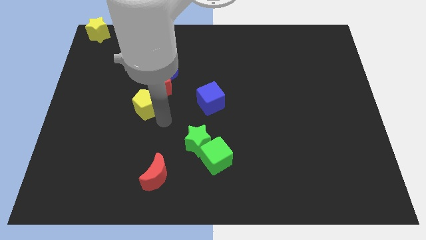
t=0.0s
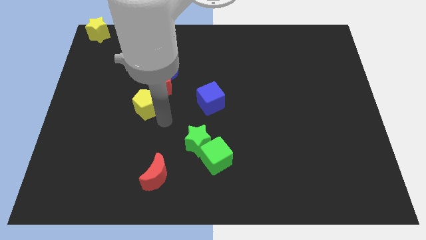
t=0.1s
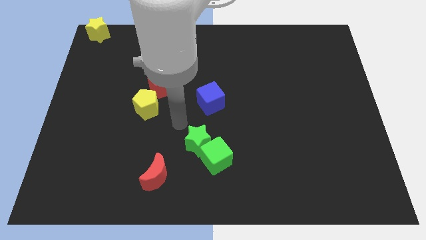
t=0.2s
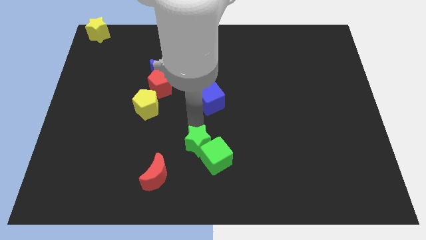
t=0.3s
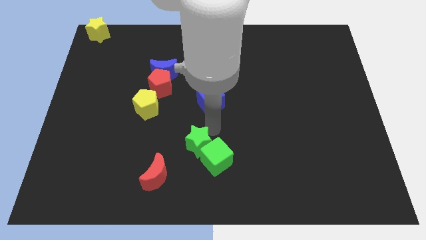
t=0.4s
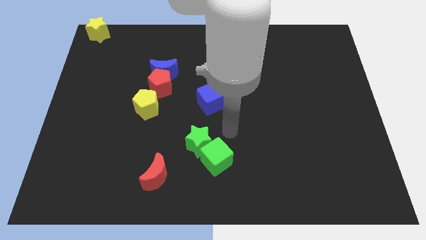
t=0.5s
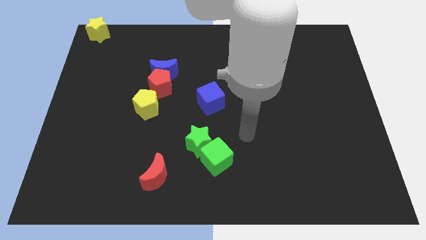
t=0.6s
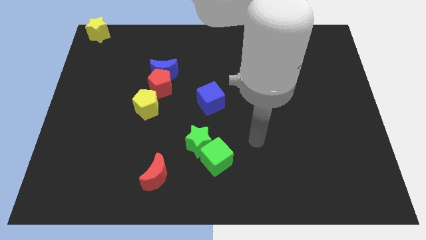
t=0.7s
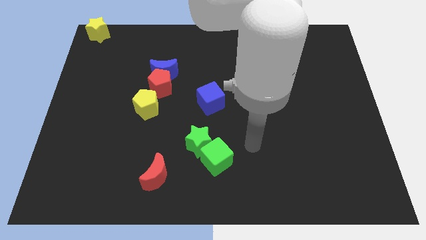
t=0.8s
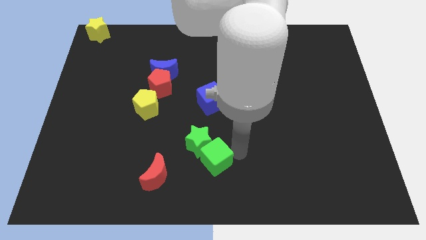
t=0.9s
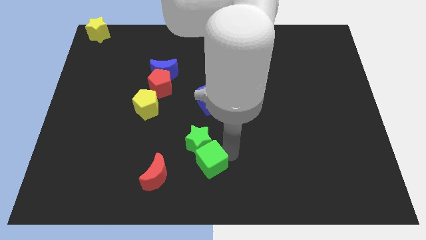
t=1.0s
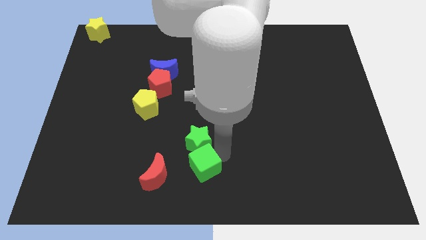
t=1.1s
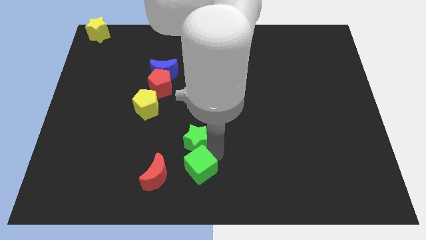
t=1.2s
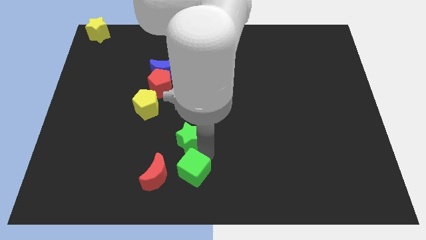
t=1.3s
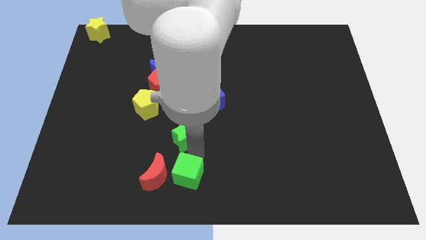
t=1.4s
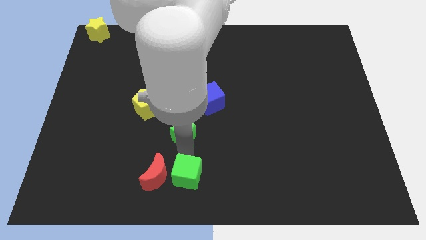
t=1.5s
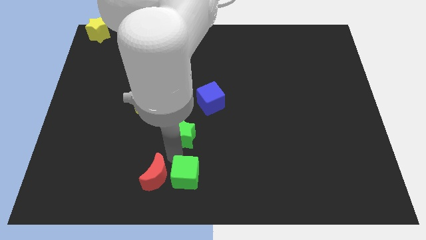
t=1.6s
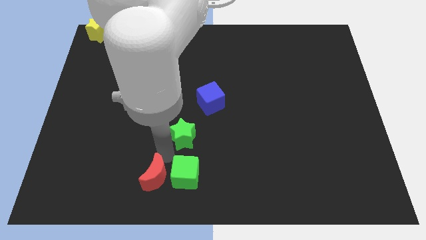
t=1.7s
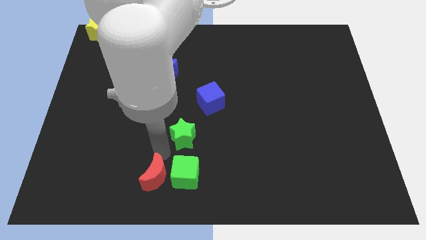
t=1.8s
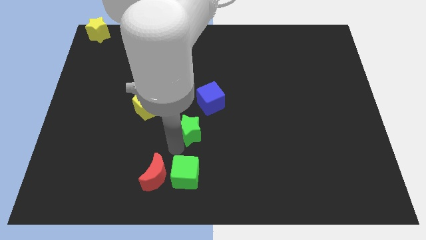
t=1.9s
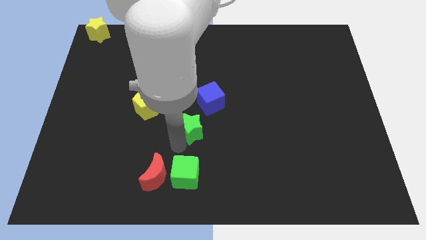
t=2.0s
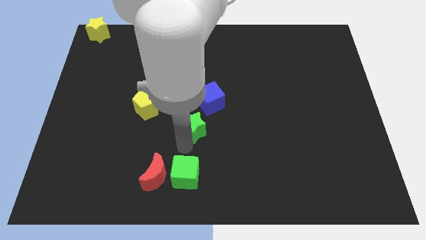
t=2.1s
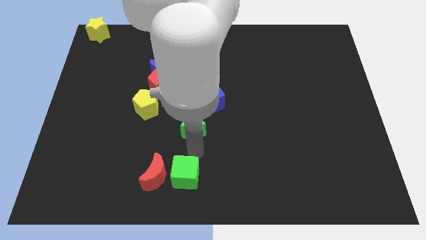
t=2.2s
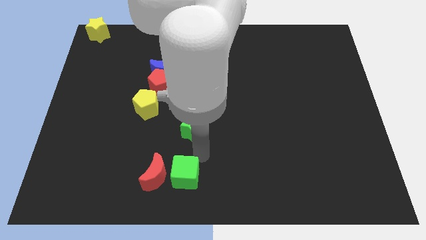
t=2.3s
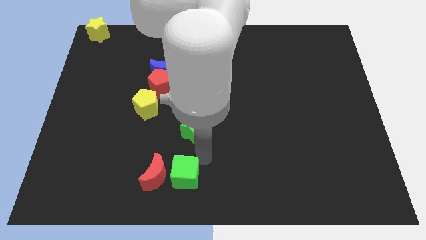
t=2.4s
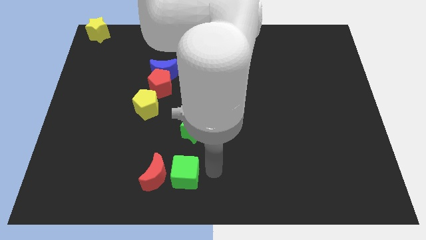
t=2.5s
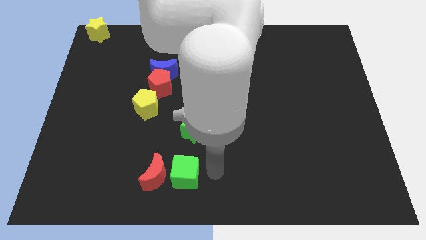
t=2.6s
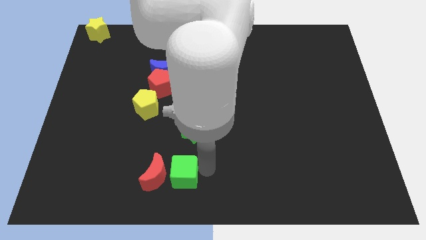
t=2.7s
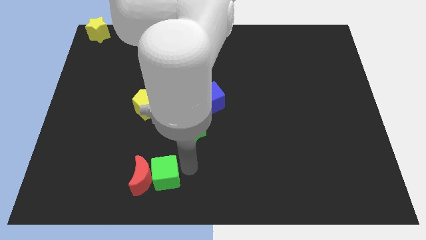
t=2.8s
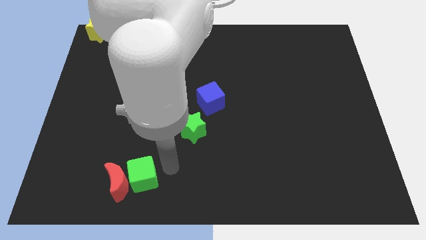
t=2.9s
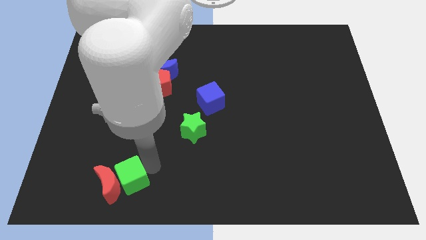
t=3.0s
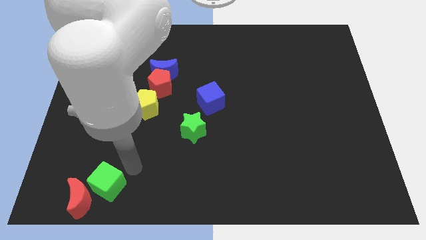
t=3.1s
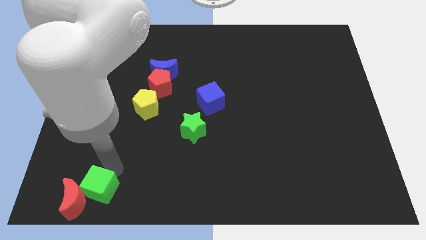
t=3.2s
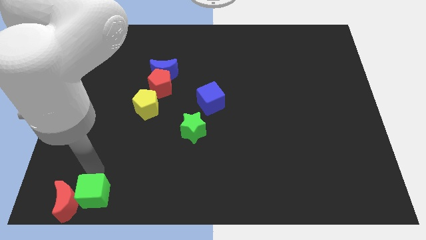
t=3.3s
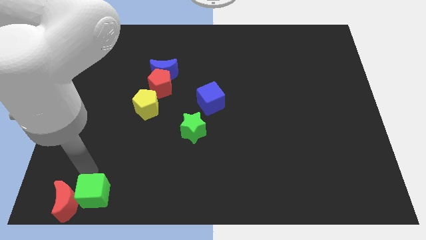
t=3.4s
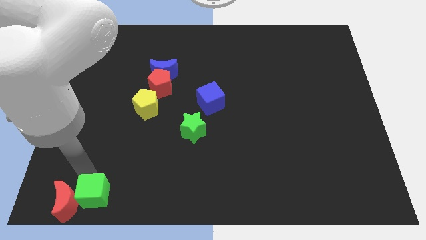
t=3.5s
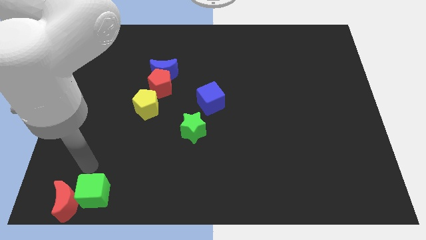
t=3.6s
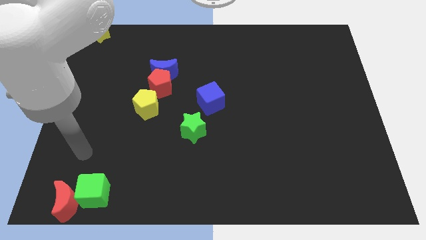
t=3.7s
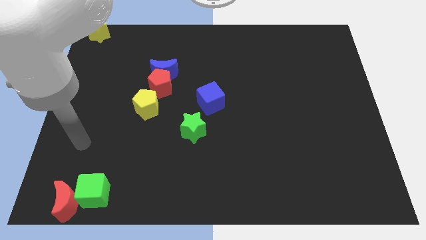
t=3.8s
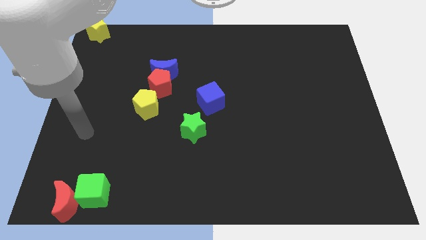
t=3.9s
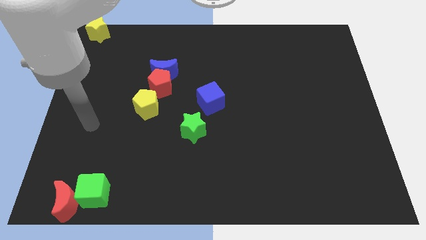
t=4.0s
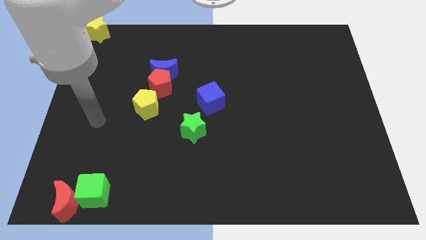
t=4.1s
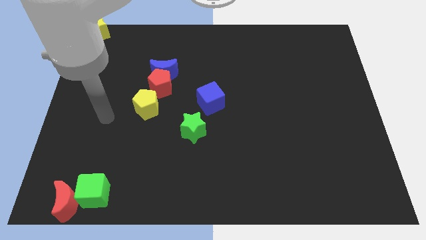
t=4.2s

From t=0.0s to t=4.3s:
push the green cube and red moon towards the bottom left corner of the board

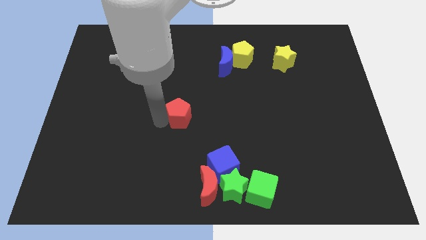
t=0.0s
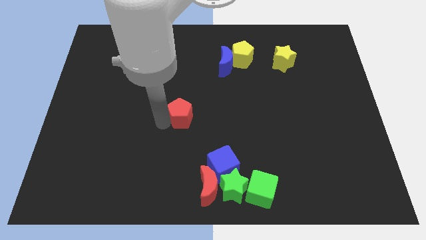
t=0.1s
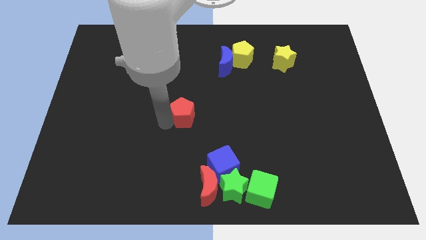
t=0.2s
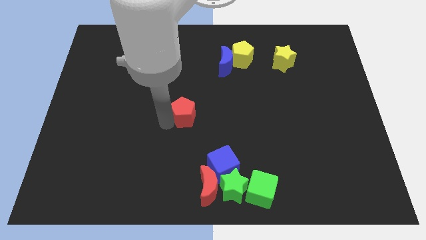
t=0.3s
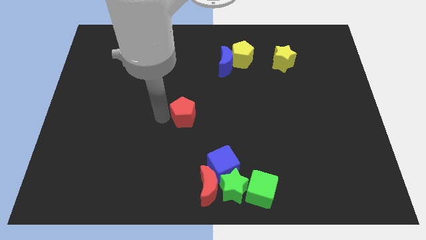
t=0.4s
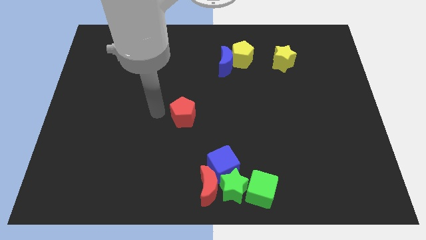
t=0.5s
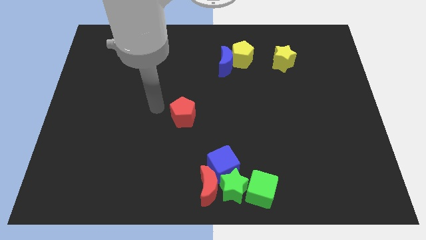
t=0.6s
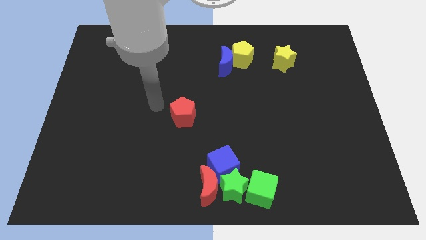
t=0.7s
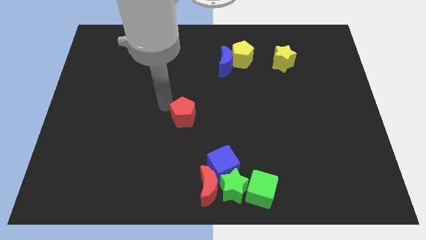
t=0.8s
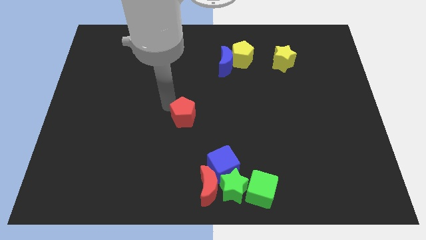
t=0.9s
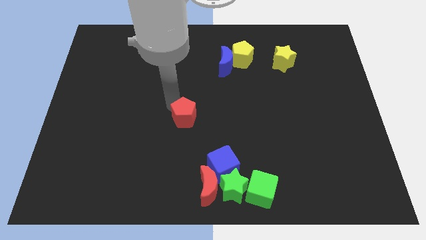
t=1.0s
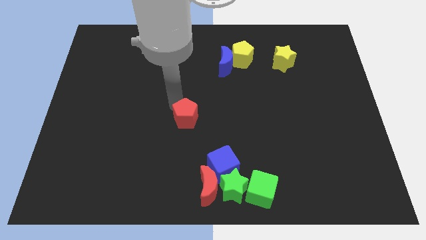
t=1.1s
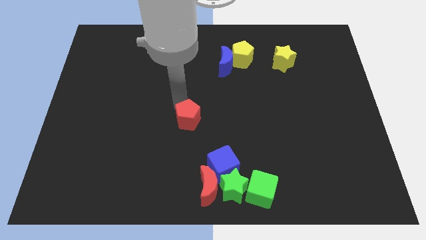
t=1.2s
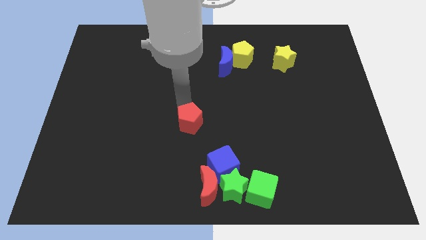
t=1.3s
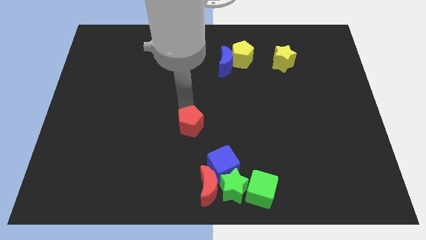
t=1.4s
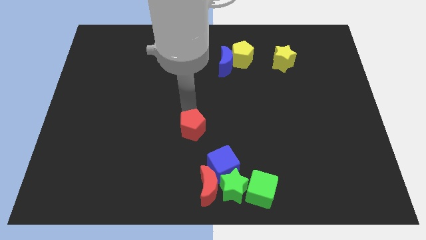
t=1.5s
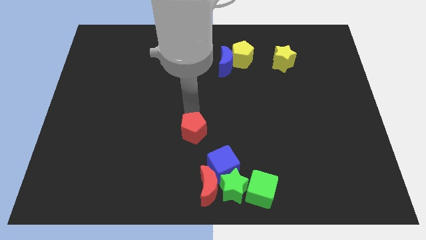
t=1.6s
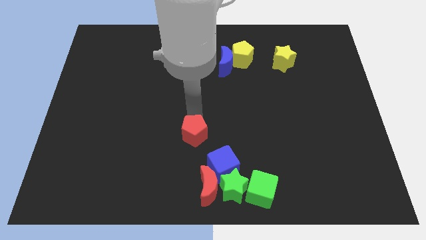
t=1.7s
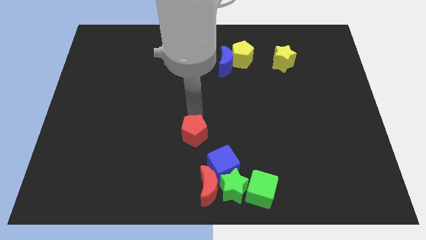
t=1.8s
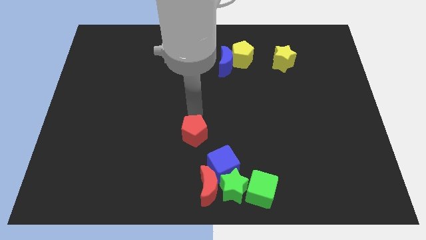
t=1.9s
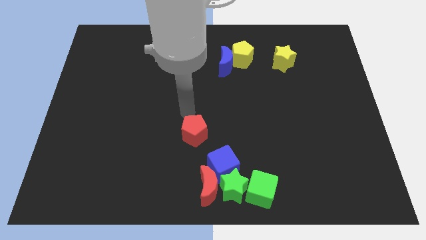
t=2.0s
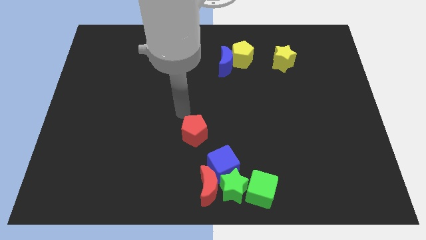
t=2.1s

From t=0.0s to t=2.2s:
push the red pentagon to the top of the red crescent

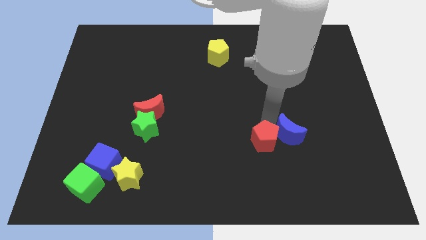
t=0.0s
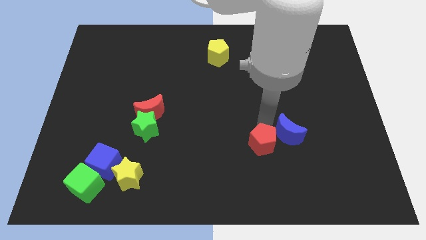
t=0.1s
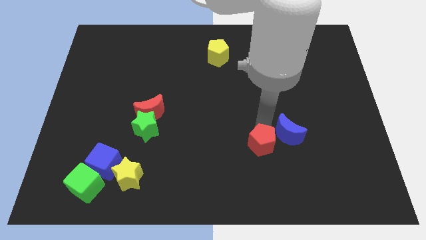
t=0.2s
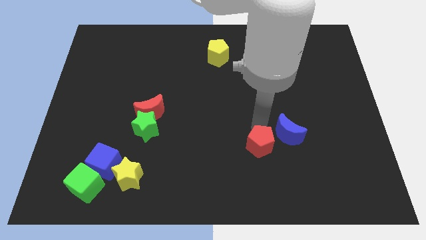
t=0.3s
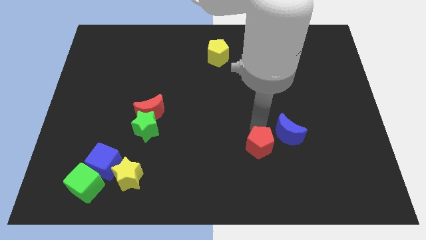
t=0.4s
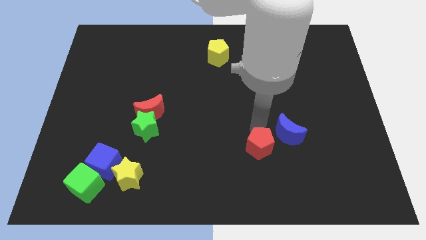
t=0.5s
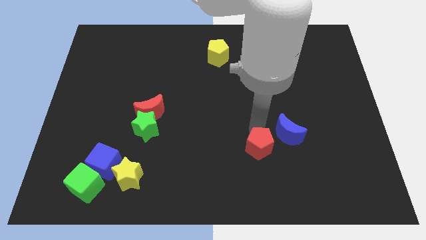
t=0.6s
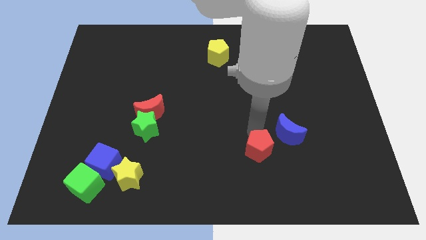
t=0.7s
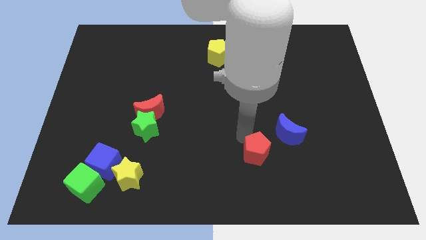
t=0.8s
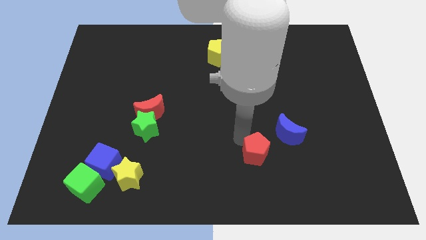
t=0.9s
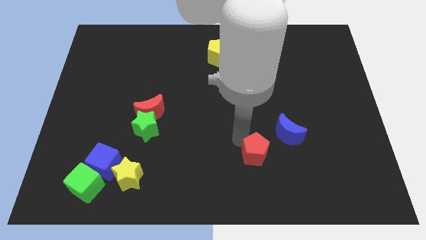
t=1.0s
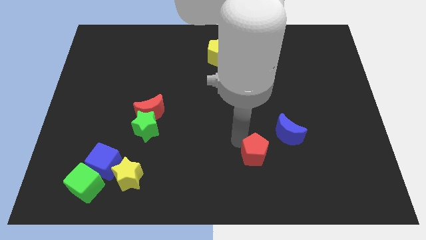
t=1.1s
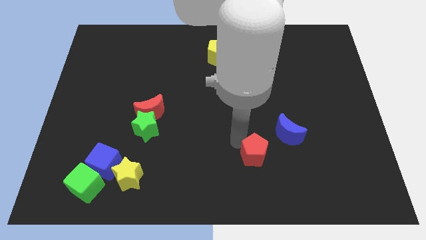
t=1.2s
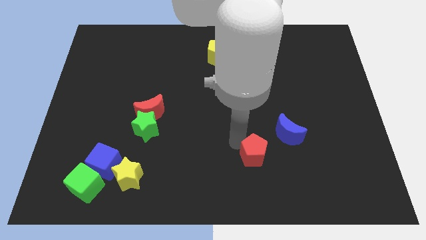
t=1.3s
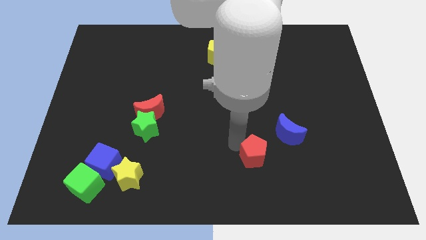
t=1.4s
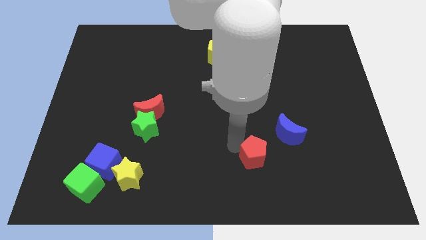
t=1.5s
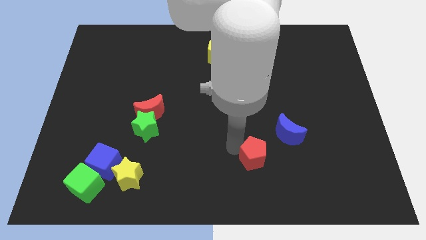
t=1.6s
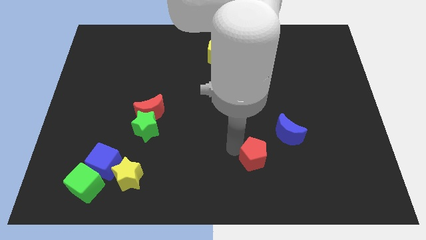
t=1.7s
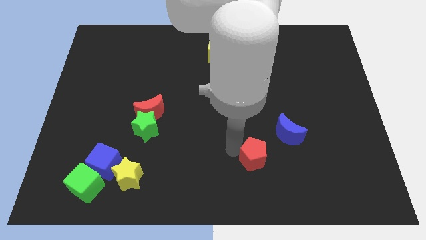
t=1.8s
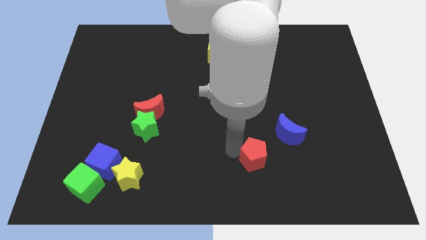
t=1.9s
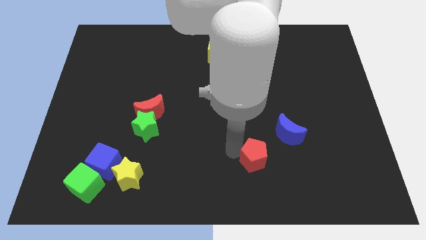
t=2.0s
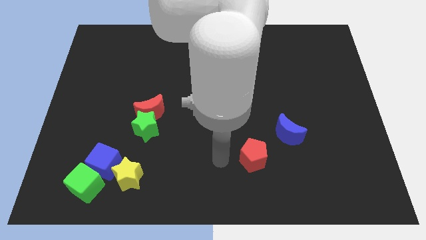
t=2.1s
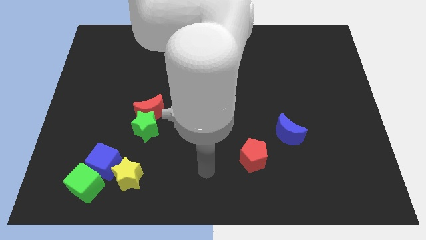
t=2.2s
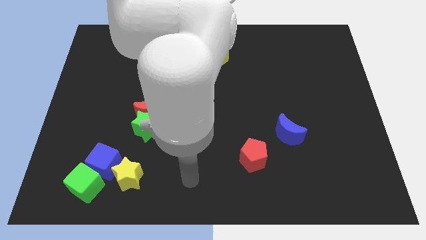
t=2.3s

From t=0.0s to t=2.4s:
move the red pentagon towards the bottom

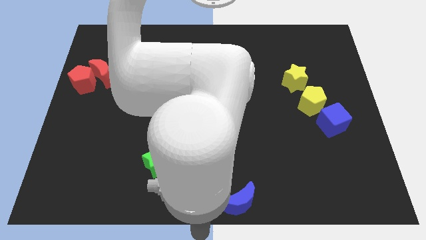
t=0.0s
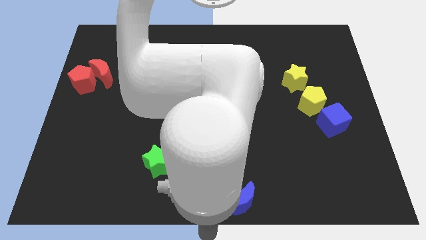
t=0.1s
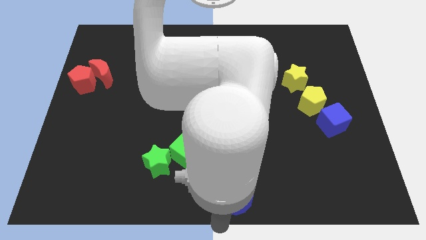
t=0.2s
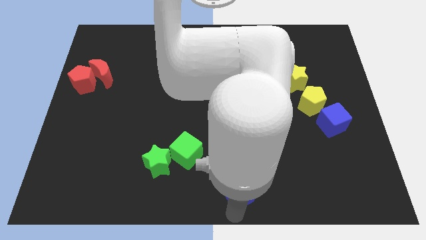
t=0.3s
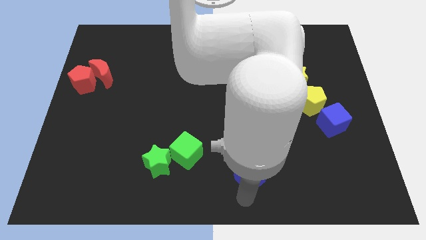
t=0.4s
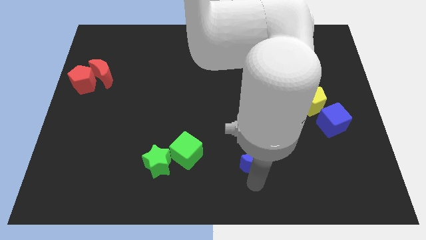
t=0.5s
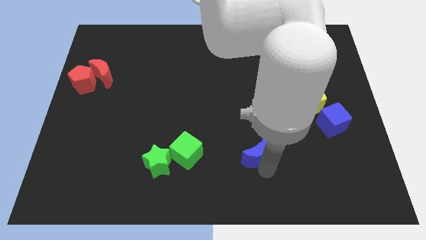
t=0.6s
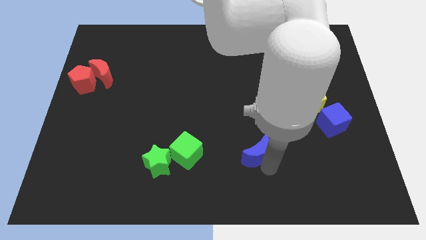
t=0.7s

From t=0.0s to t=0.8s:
drag the blue crescent to the right of the group of green blocks
